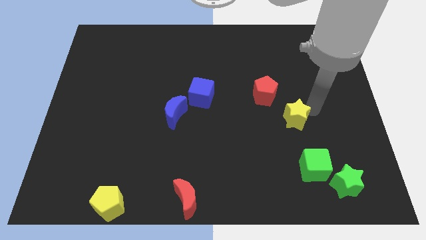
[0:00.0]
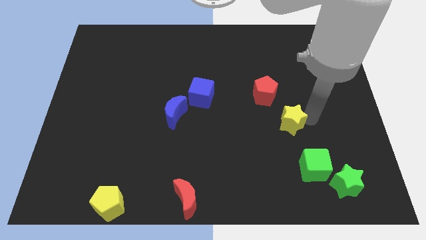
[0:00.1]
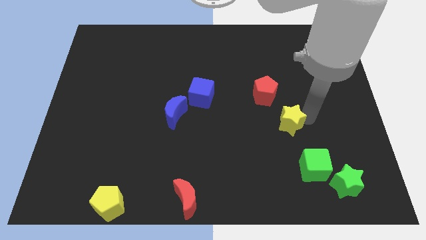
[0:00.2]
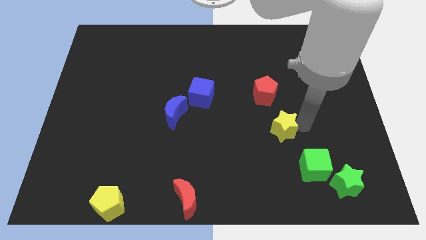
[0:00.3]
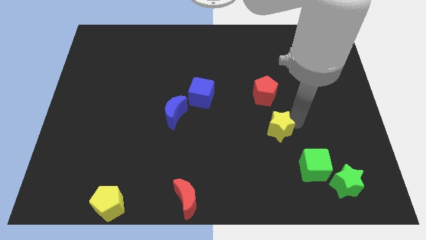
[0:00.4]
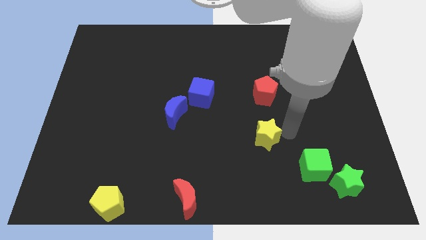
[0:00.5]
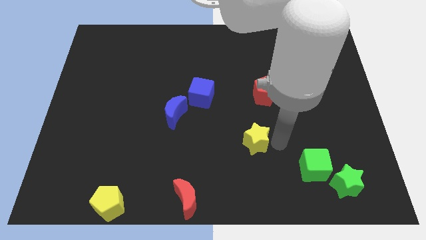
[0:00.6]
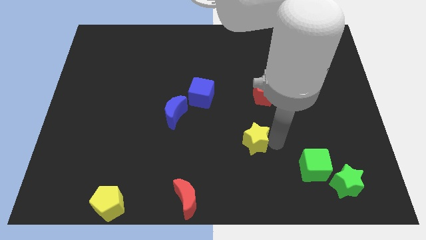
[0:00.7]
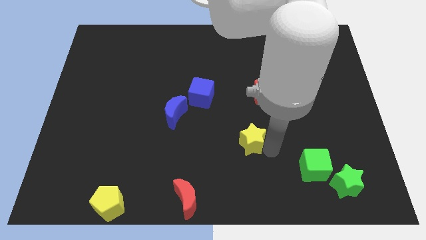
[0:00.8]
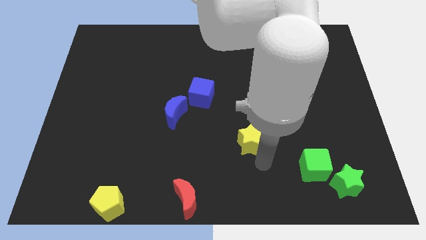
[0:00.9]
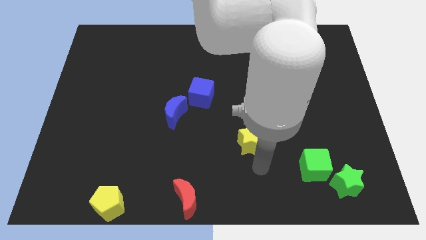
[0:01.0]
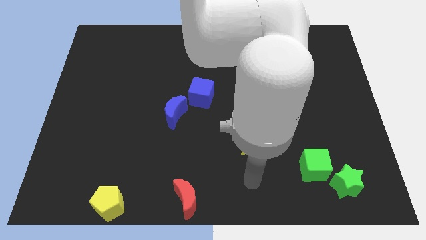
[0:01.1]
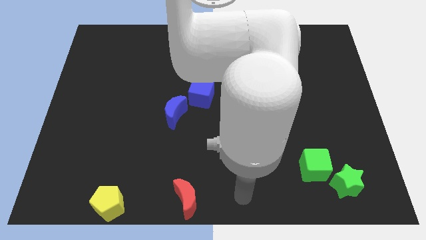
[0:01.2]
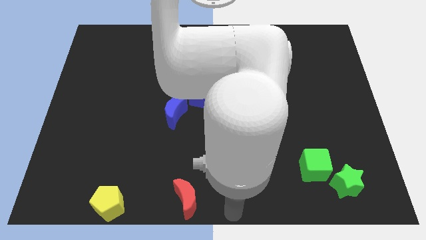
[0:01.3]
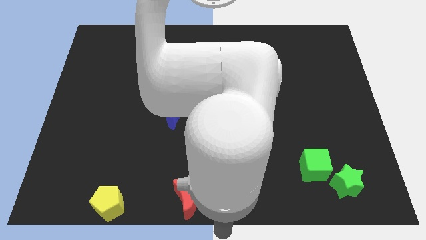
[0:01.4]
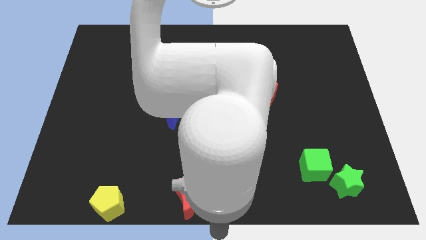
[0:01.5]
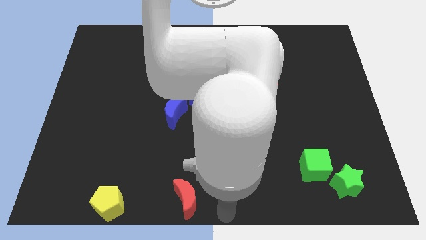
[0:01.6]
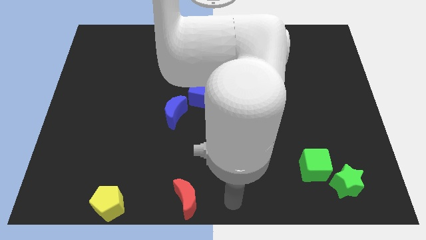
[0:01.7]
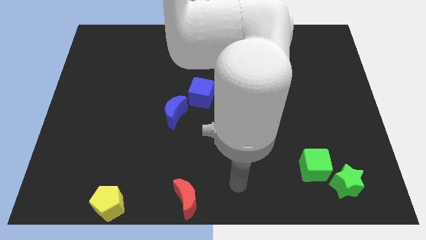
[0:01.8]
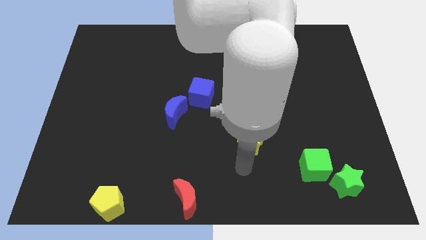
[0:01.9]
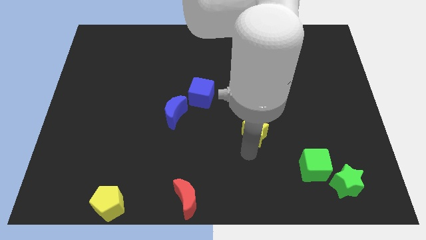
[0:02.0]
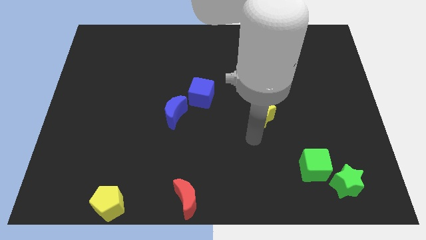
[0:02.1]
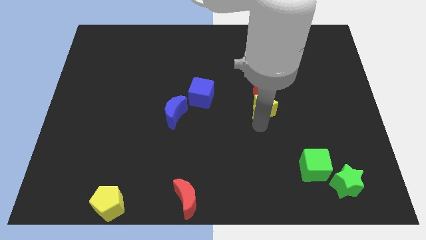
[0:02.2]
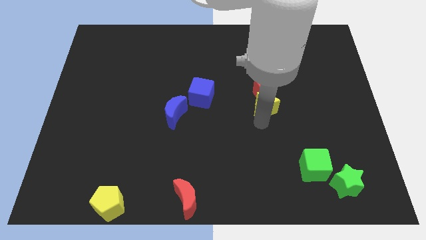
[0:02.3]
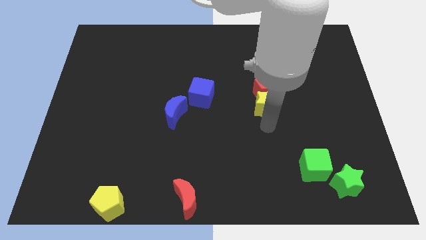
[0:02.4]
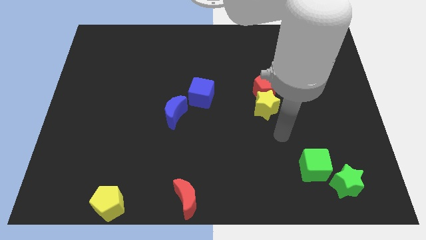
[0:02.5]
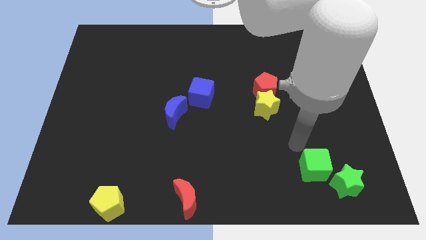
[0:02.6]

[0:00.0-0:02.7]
push the yellow star into the red pentagon

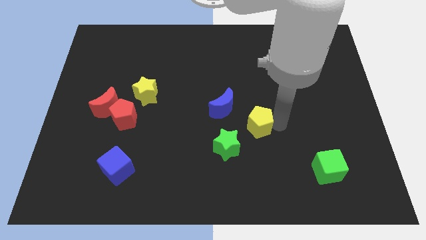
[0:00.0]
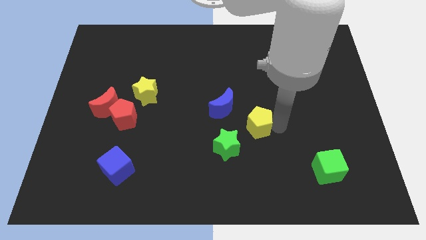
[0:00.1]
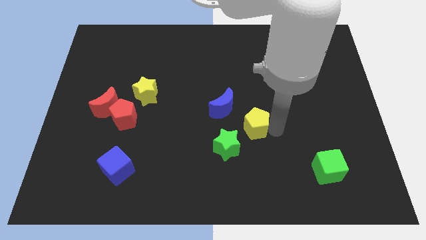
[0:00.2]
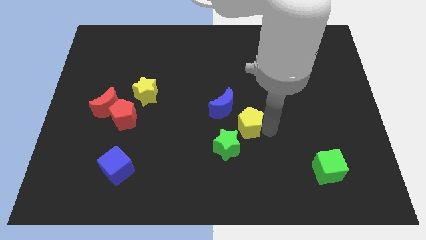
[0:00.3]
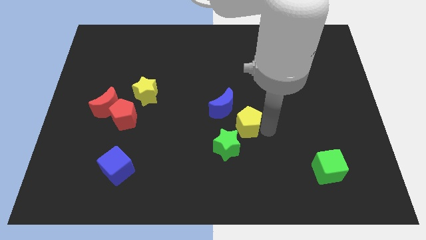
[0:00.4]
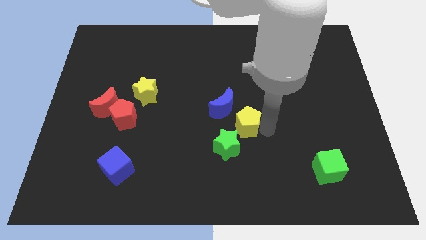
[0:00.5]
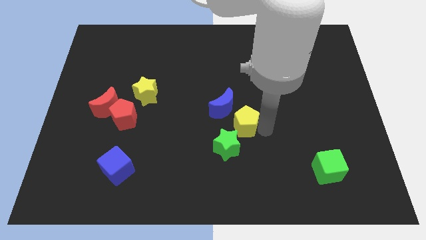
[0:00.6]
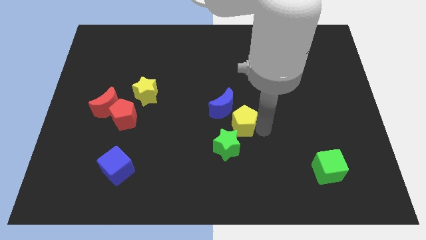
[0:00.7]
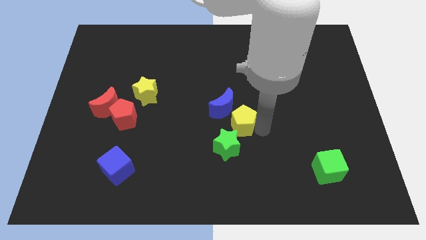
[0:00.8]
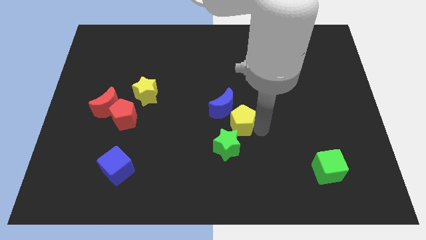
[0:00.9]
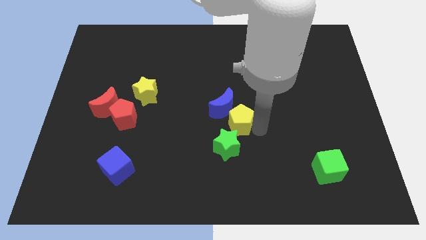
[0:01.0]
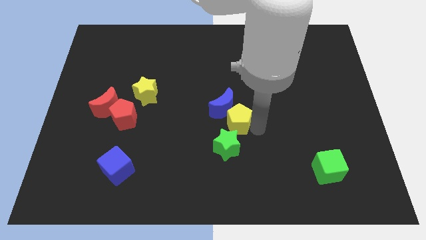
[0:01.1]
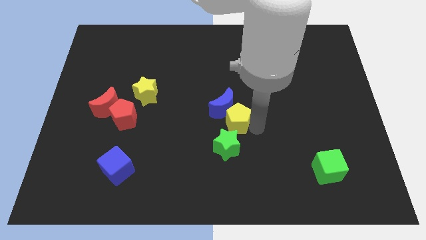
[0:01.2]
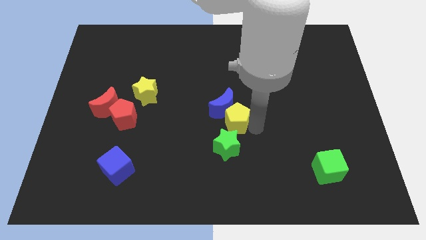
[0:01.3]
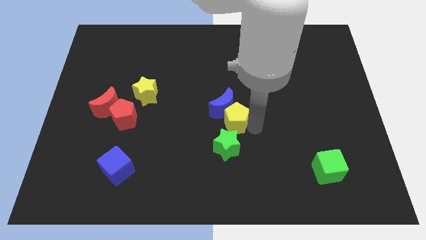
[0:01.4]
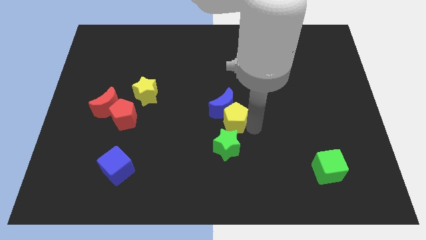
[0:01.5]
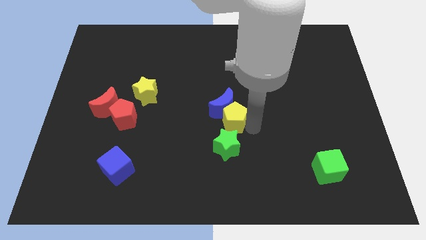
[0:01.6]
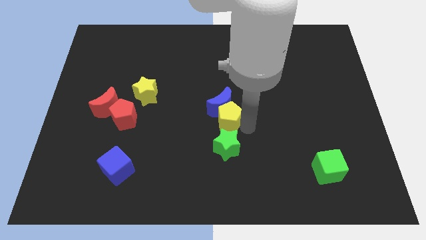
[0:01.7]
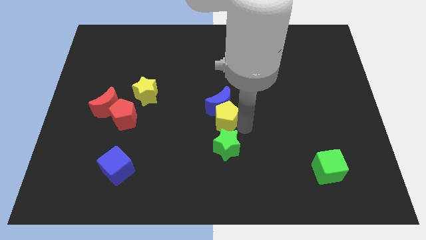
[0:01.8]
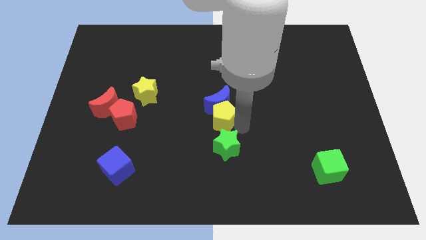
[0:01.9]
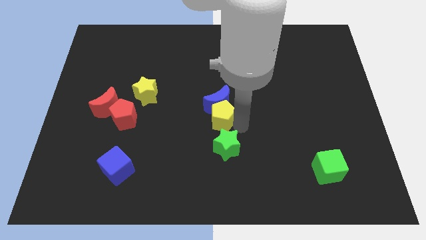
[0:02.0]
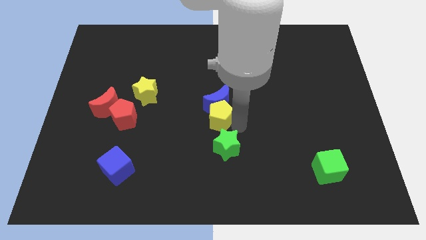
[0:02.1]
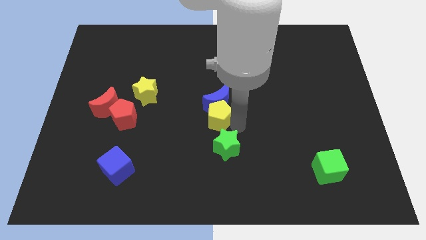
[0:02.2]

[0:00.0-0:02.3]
place the yellow pentagon below blue moon

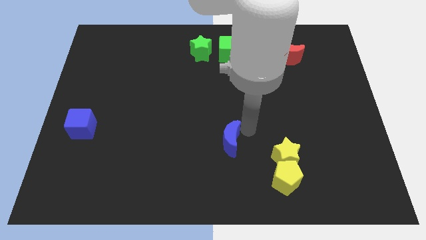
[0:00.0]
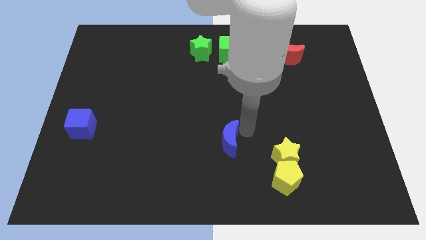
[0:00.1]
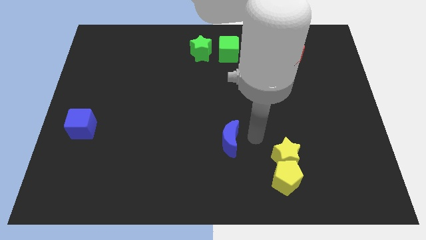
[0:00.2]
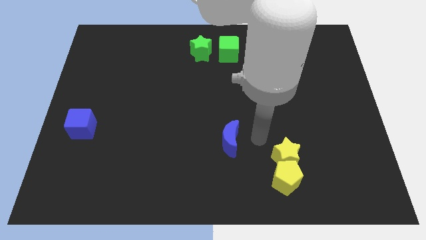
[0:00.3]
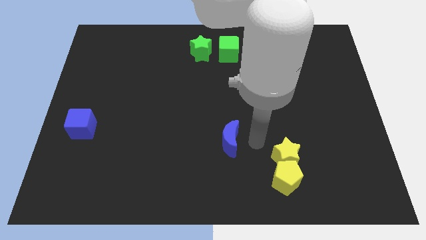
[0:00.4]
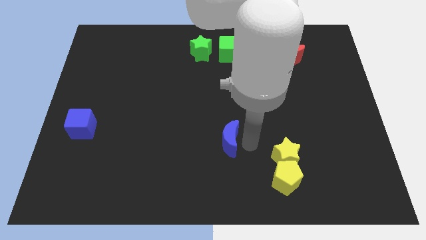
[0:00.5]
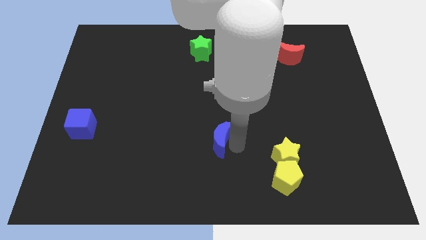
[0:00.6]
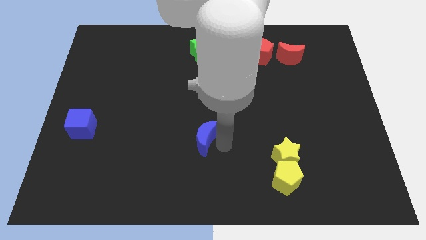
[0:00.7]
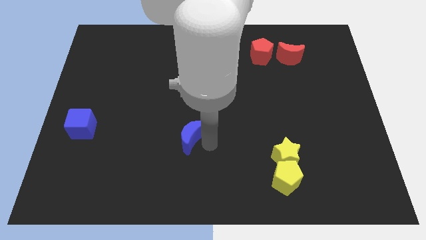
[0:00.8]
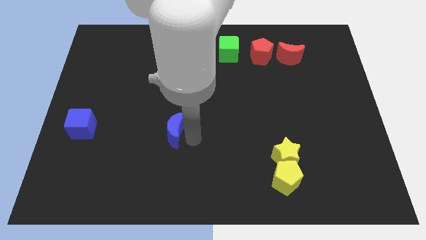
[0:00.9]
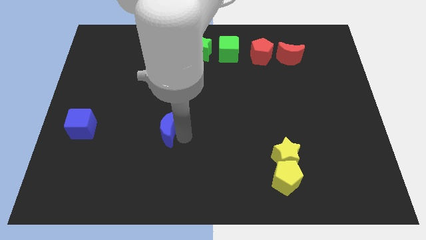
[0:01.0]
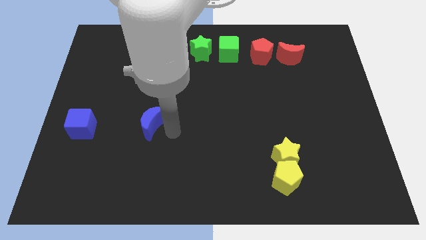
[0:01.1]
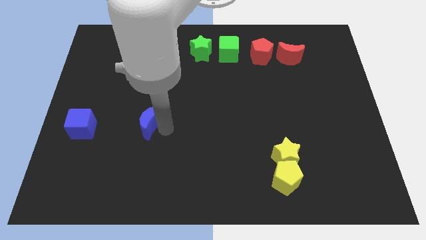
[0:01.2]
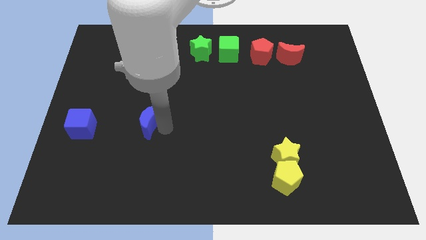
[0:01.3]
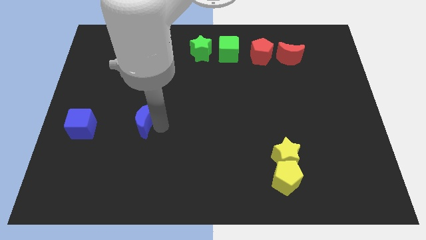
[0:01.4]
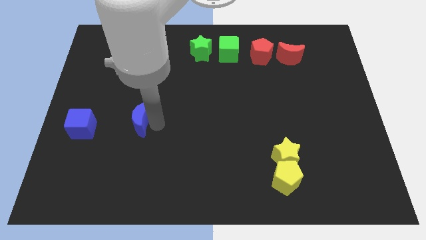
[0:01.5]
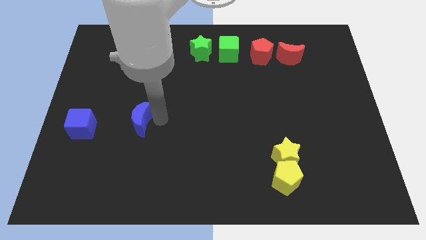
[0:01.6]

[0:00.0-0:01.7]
move the blue moon slightly to the left side of the board

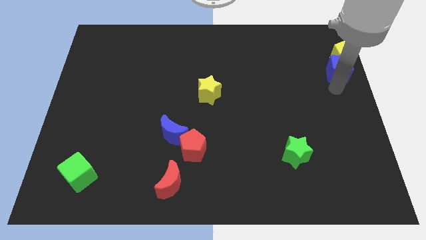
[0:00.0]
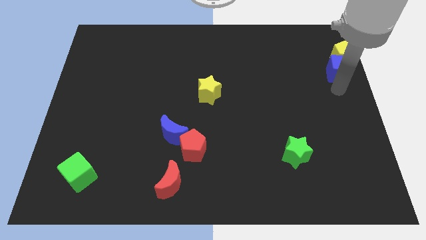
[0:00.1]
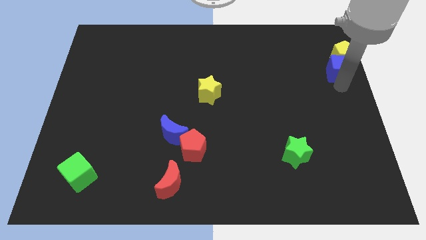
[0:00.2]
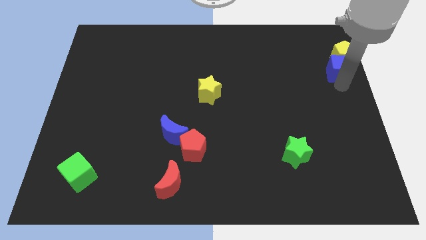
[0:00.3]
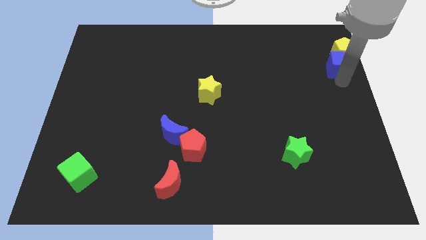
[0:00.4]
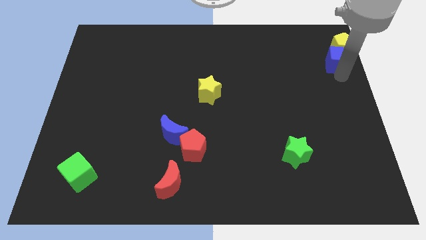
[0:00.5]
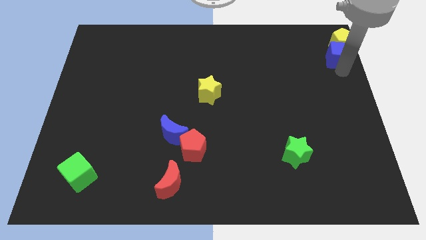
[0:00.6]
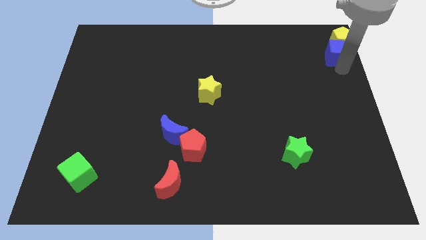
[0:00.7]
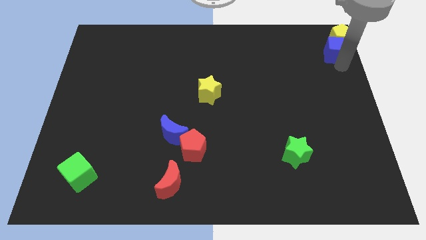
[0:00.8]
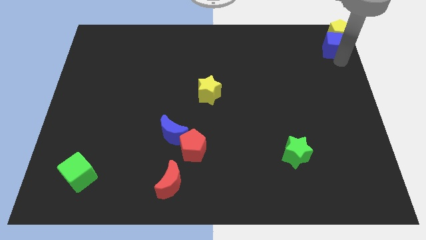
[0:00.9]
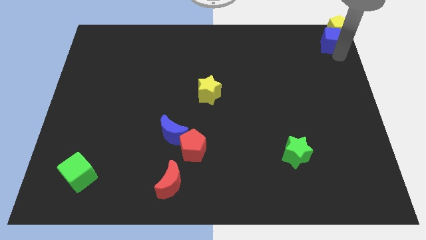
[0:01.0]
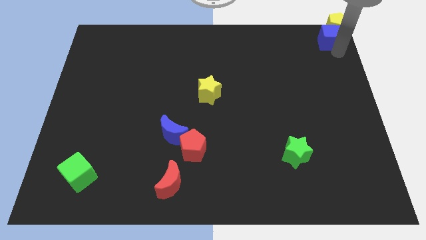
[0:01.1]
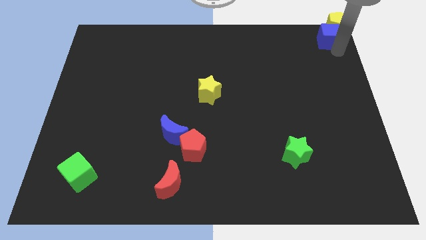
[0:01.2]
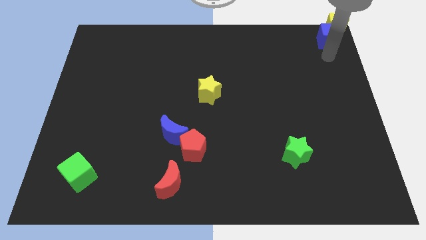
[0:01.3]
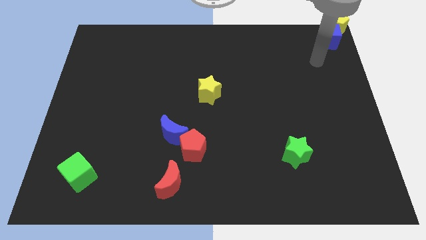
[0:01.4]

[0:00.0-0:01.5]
put the blue cube and yellow pentagon at the top right corner

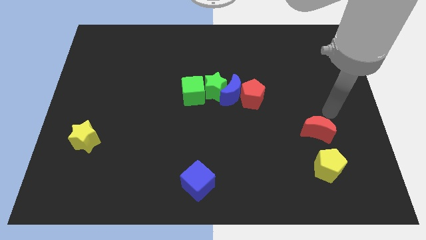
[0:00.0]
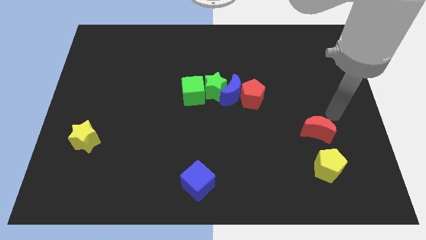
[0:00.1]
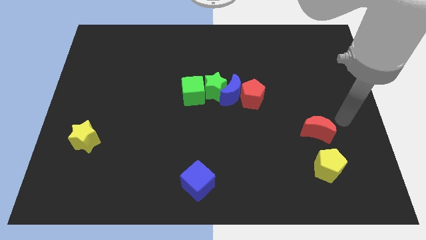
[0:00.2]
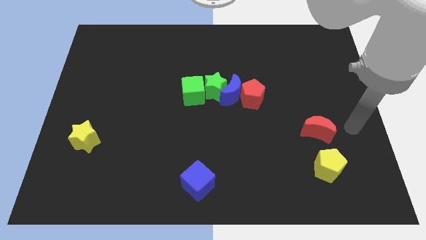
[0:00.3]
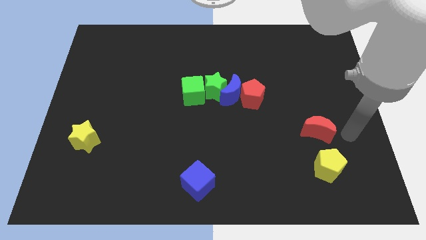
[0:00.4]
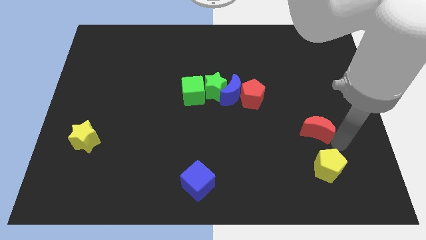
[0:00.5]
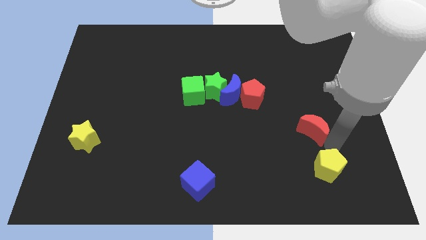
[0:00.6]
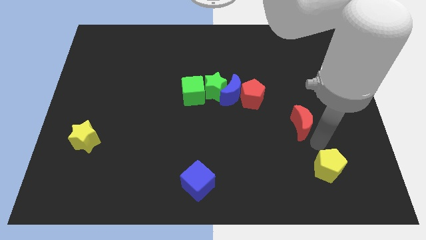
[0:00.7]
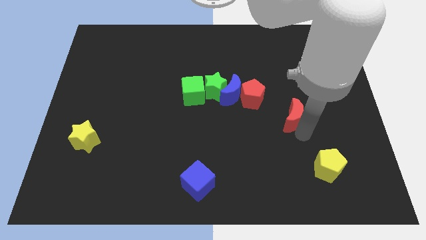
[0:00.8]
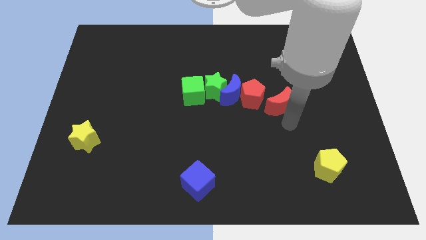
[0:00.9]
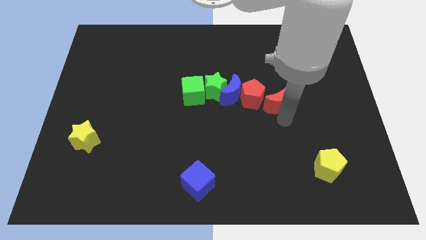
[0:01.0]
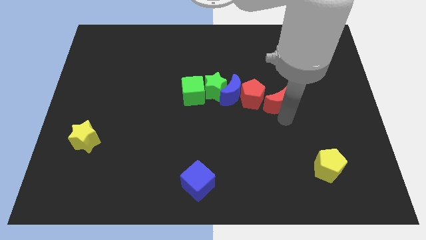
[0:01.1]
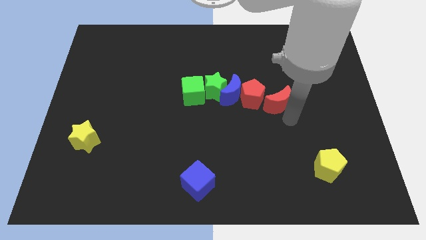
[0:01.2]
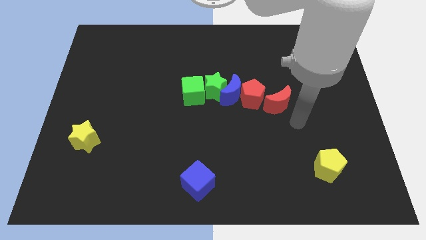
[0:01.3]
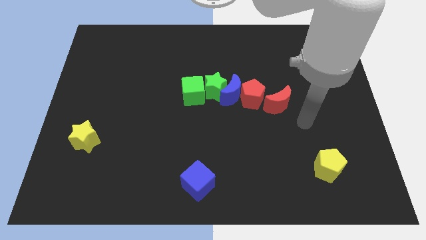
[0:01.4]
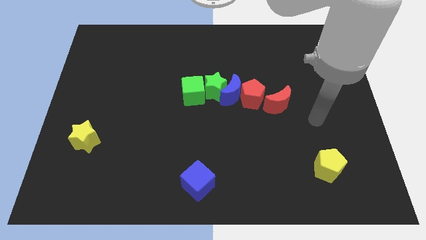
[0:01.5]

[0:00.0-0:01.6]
drag the red moon right to the red pentagon
